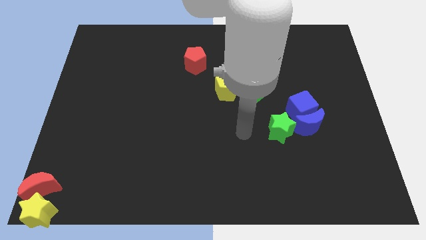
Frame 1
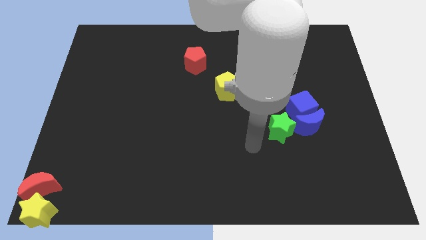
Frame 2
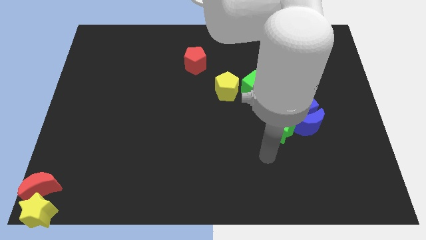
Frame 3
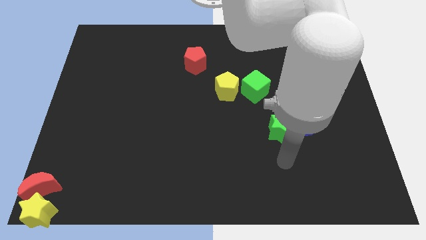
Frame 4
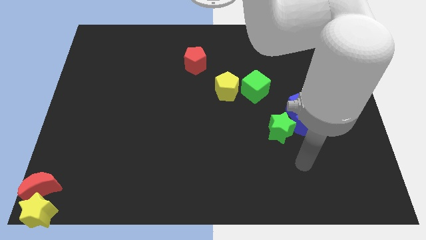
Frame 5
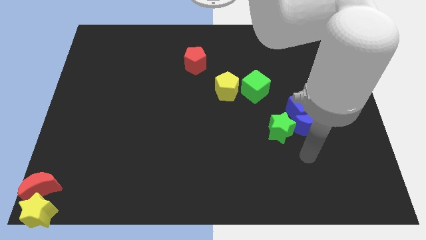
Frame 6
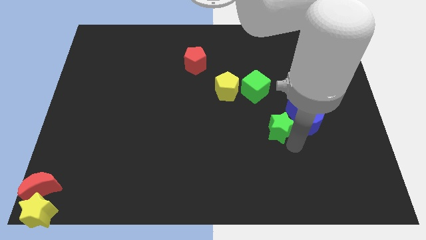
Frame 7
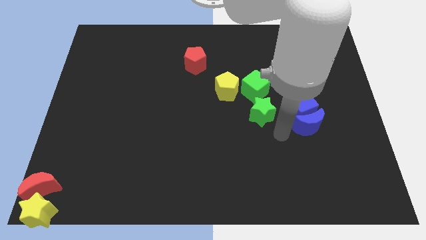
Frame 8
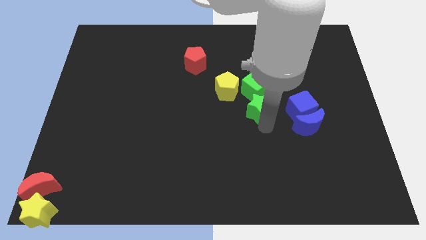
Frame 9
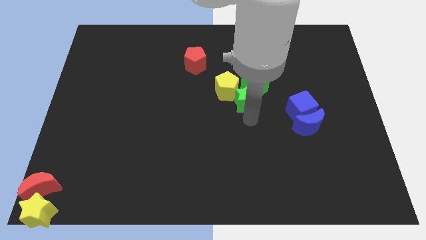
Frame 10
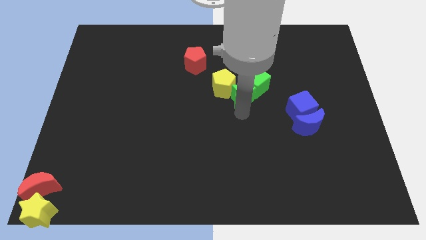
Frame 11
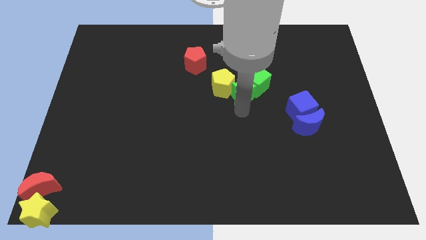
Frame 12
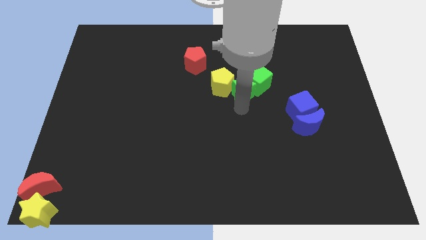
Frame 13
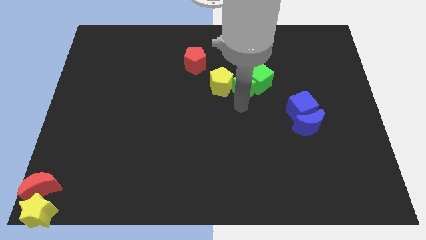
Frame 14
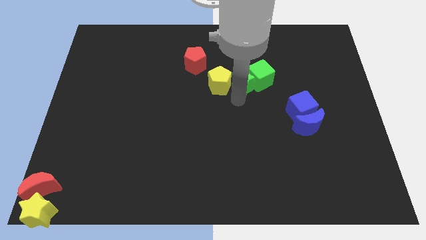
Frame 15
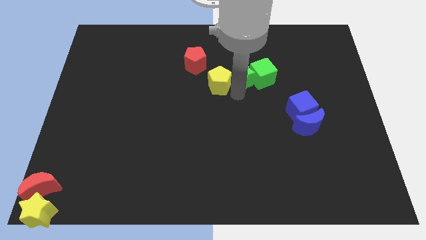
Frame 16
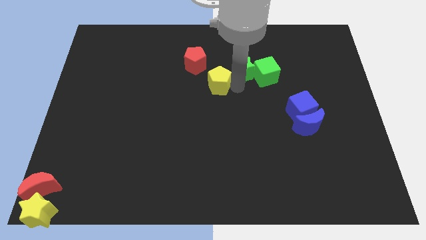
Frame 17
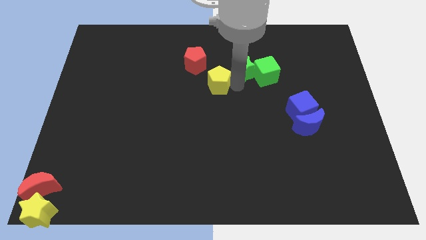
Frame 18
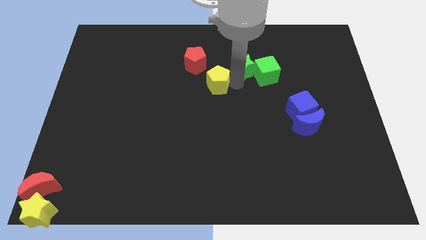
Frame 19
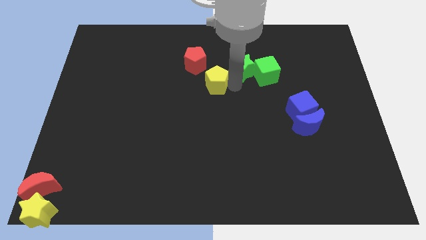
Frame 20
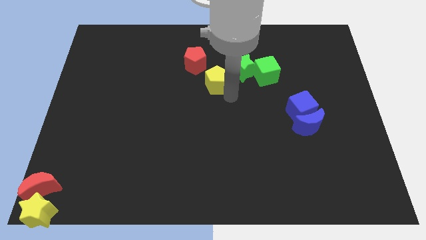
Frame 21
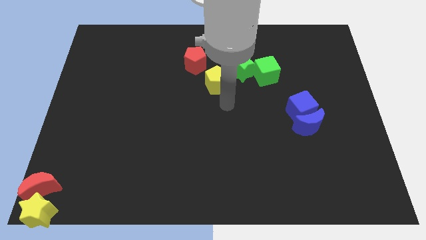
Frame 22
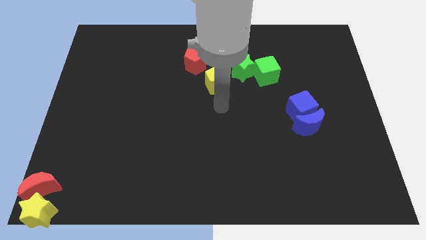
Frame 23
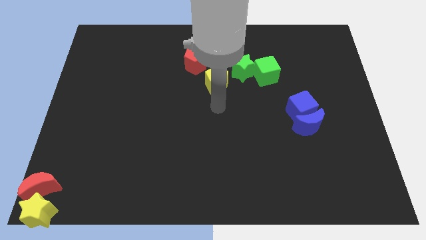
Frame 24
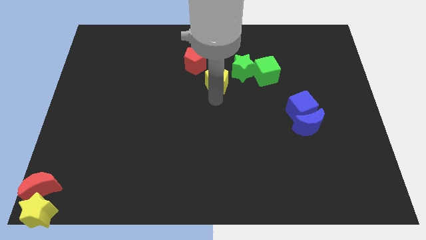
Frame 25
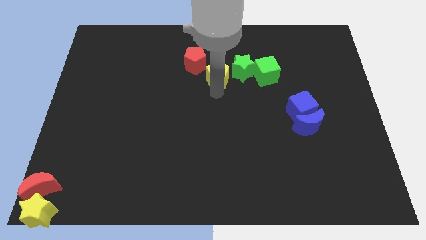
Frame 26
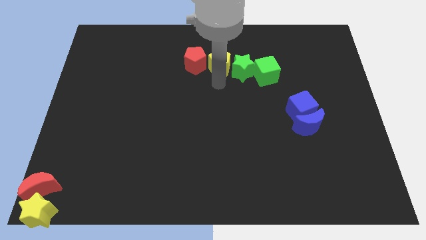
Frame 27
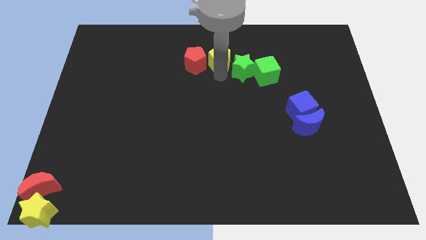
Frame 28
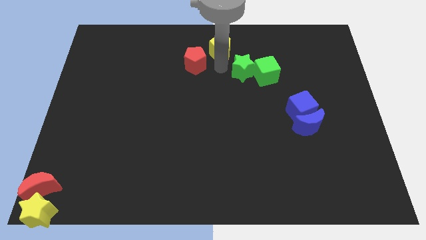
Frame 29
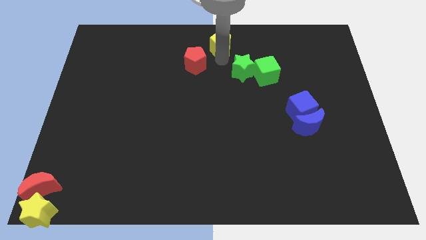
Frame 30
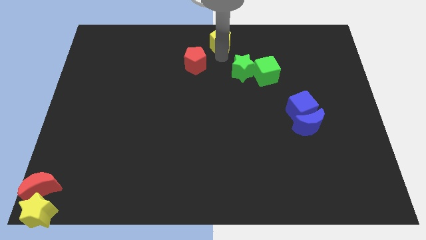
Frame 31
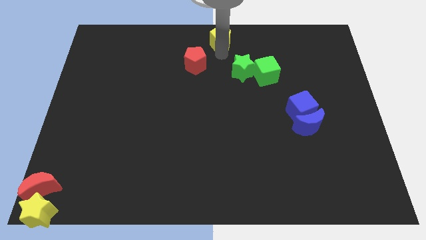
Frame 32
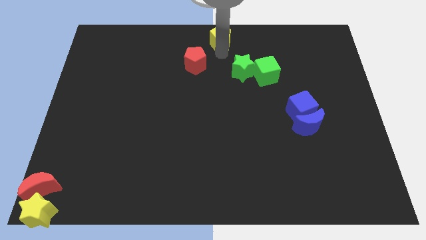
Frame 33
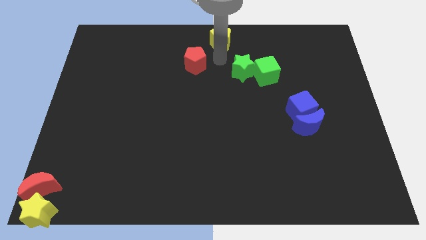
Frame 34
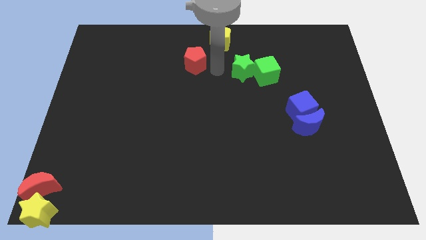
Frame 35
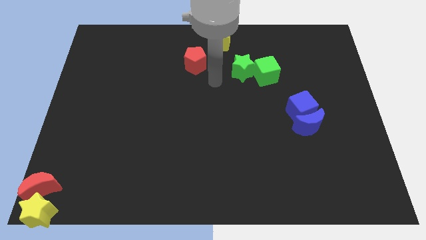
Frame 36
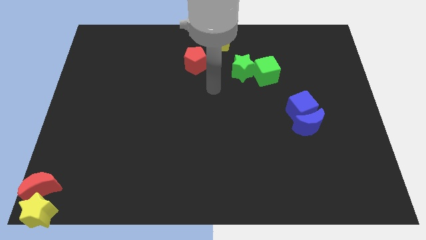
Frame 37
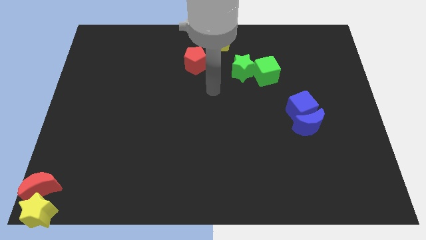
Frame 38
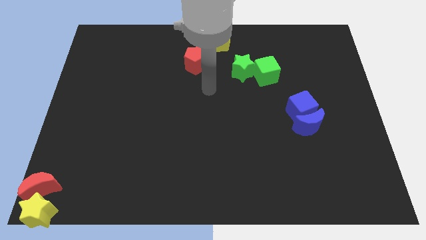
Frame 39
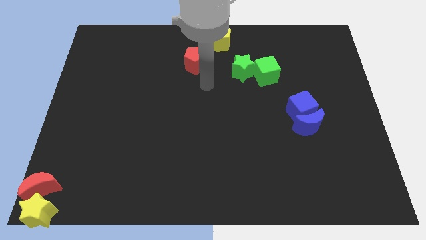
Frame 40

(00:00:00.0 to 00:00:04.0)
move the yellow pentagon to the top center of the board

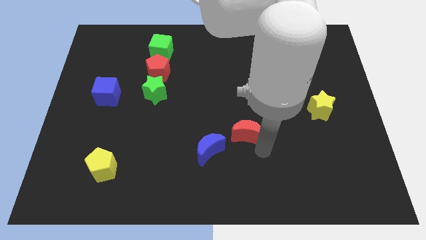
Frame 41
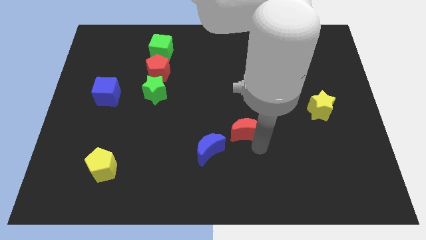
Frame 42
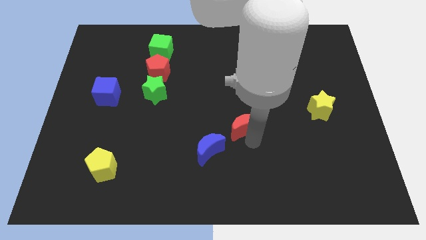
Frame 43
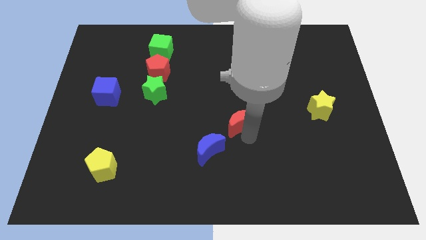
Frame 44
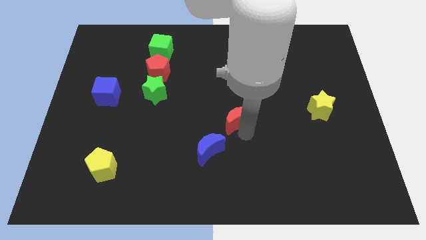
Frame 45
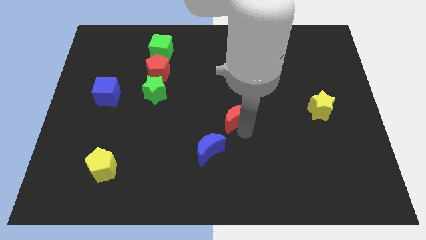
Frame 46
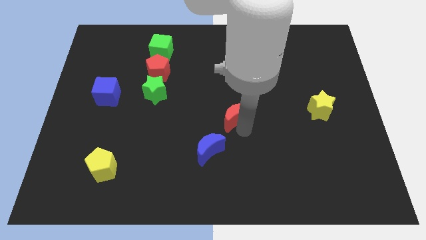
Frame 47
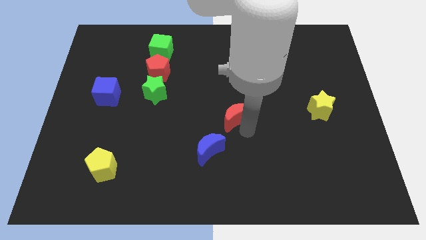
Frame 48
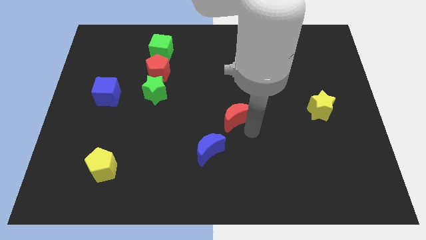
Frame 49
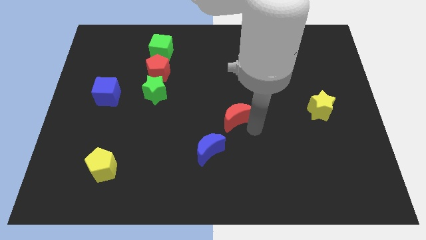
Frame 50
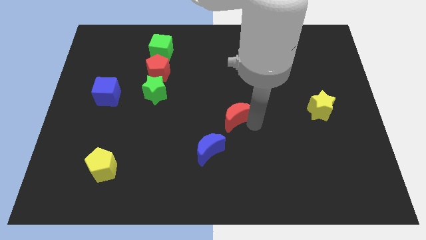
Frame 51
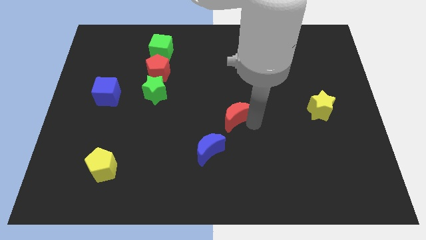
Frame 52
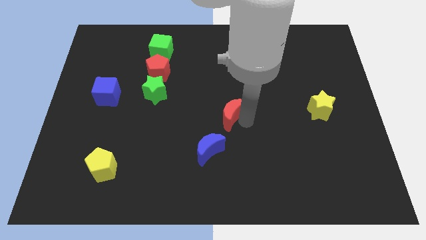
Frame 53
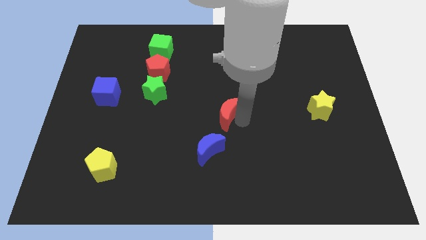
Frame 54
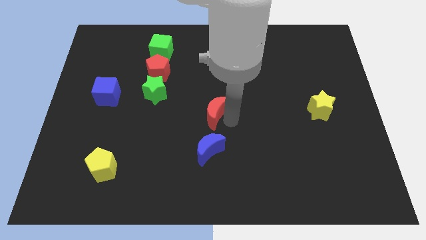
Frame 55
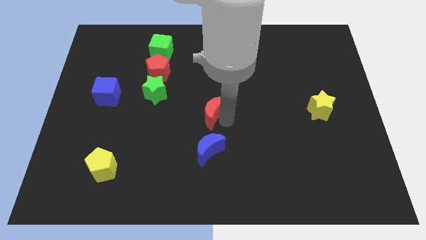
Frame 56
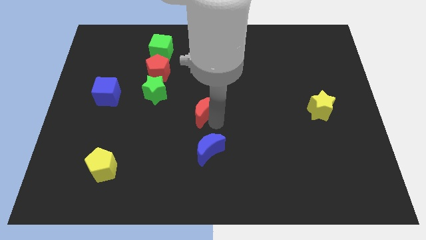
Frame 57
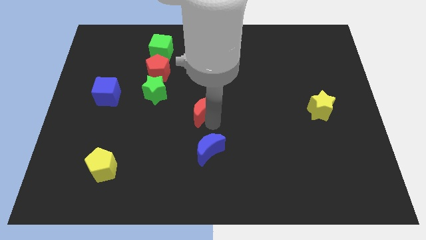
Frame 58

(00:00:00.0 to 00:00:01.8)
place red moon on top of blue moon

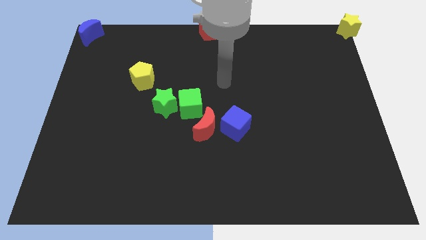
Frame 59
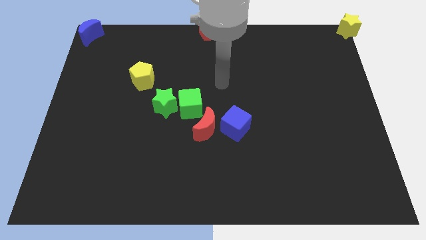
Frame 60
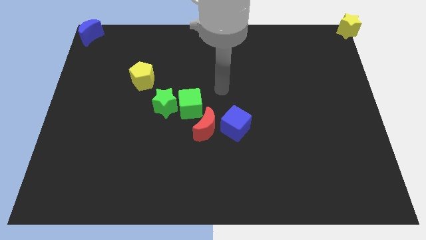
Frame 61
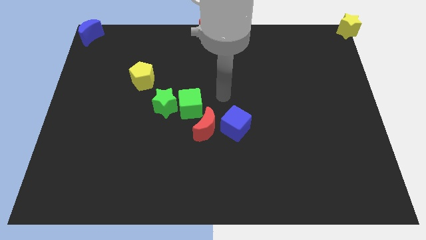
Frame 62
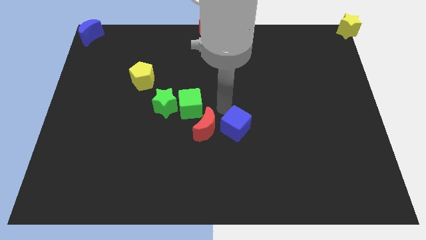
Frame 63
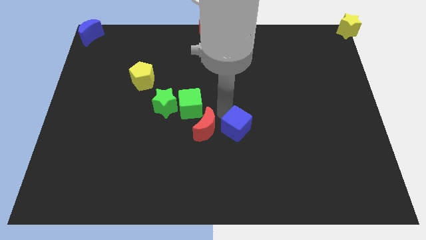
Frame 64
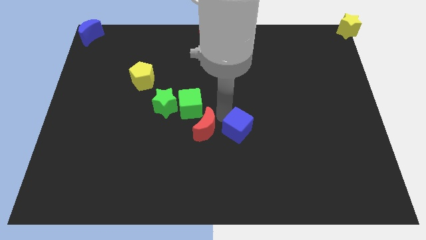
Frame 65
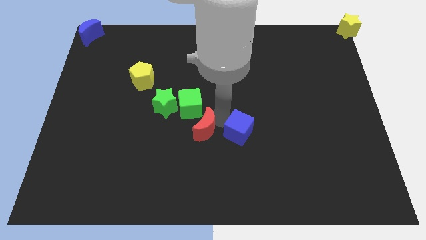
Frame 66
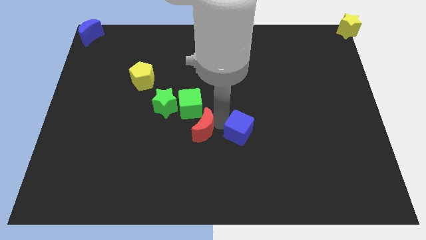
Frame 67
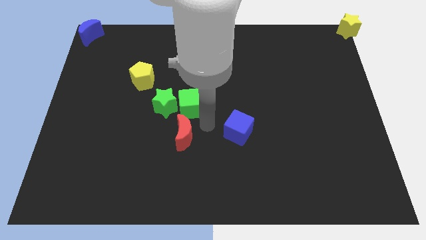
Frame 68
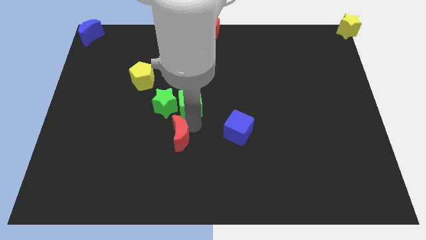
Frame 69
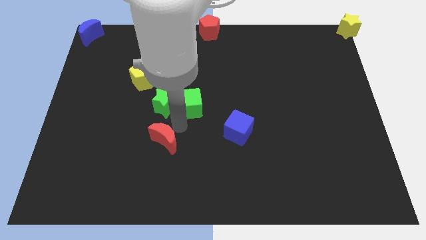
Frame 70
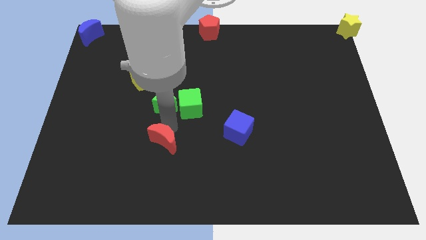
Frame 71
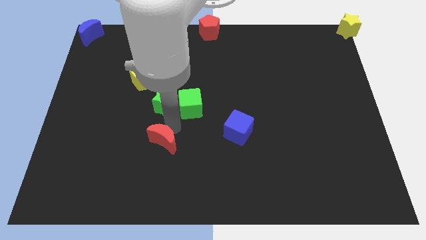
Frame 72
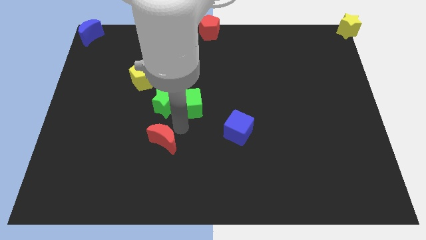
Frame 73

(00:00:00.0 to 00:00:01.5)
move the red moon below the green star

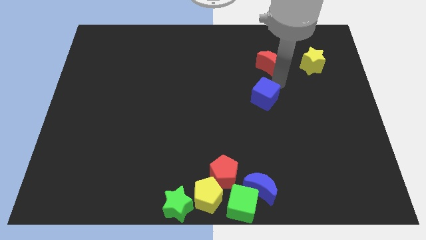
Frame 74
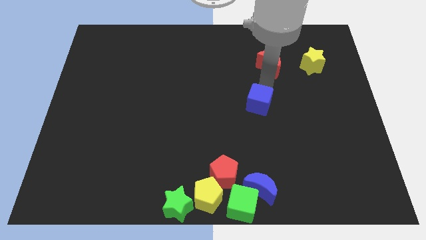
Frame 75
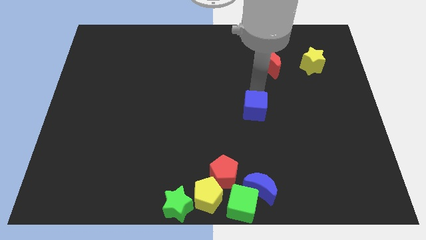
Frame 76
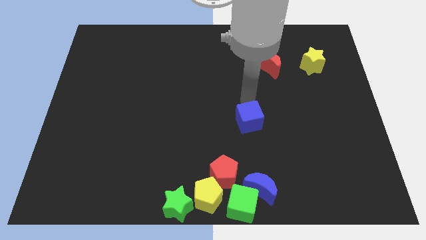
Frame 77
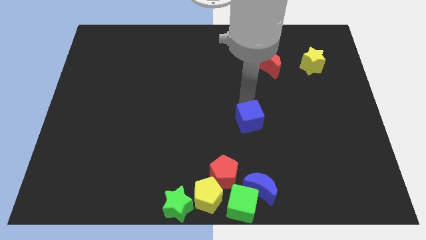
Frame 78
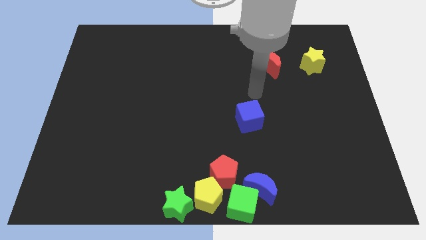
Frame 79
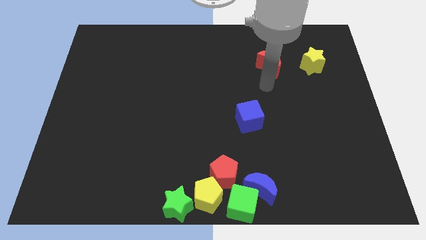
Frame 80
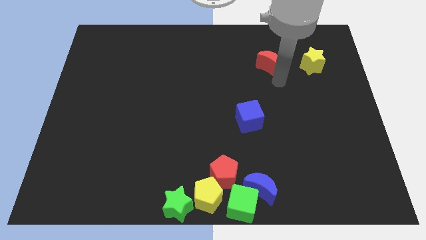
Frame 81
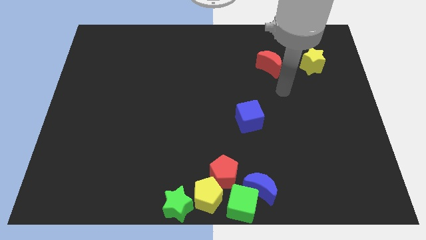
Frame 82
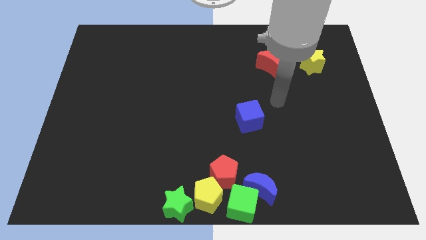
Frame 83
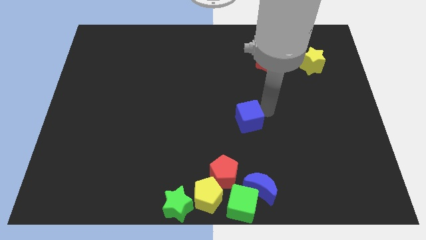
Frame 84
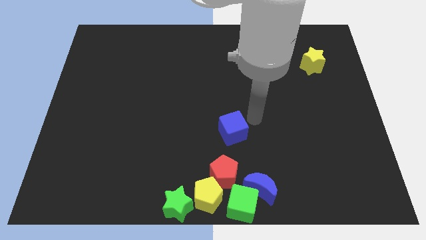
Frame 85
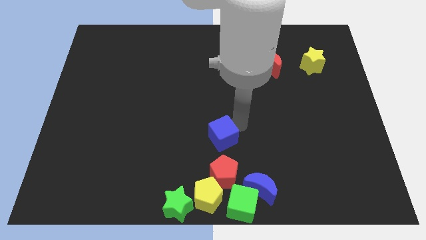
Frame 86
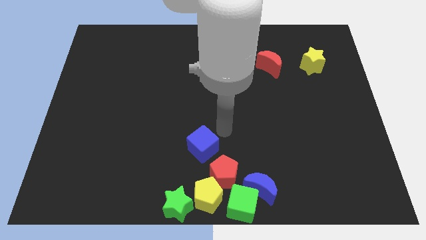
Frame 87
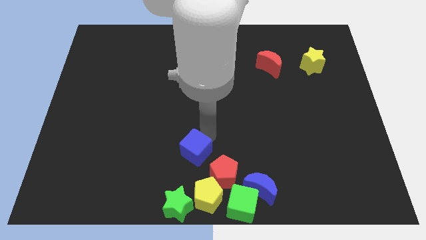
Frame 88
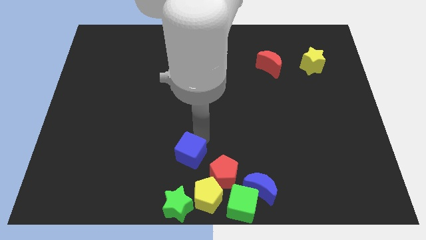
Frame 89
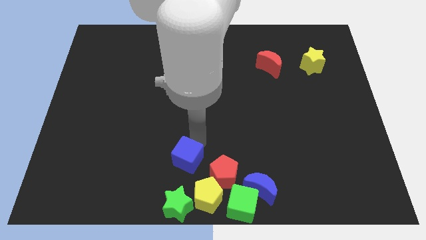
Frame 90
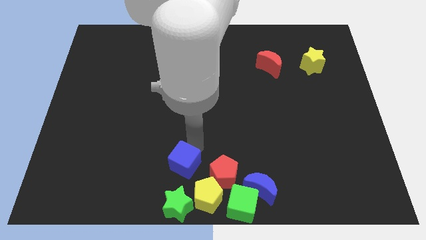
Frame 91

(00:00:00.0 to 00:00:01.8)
push the blue cube to the top of the green star
